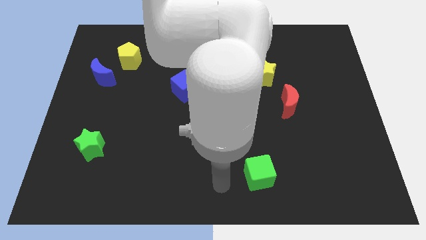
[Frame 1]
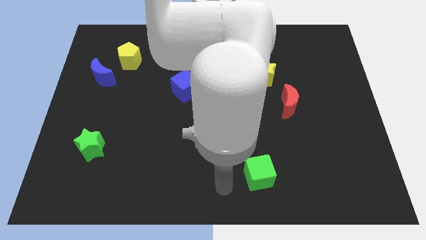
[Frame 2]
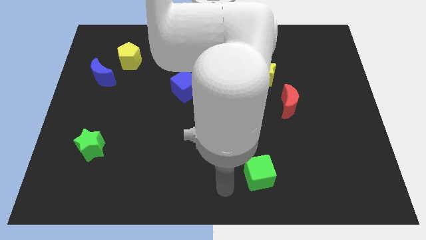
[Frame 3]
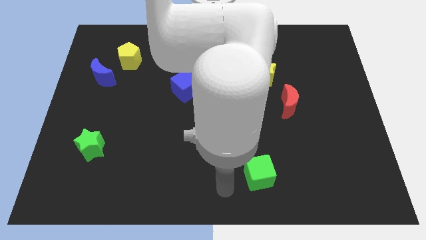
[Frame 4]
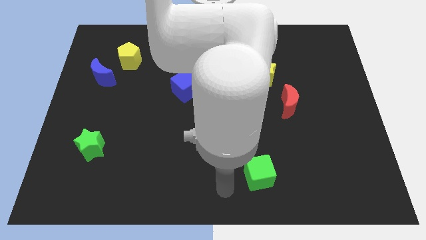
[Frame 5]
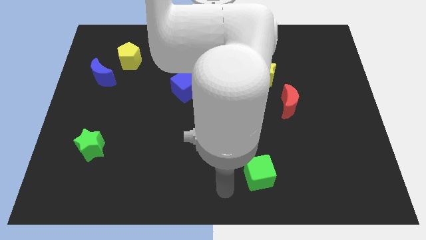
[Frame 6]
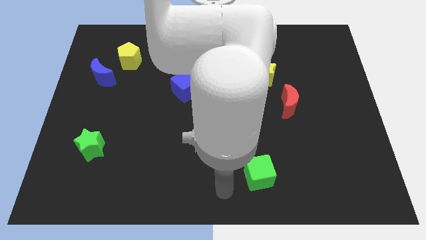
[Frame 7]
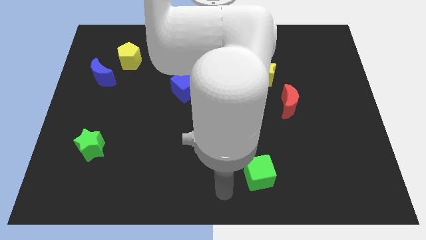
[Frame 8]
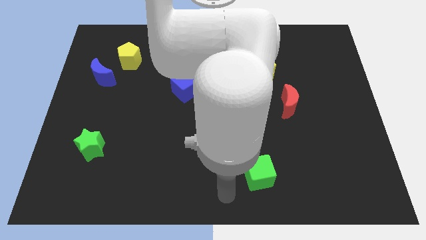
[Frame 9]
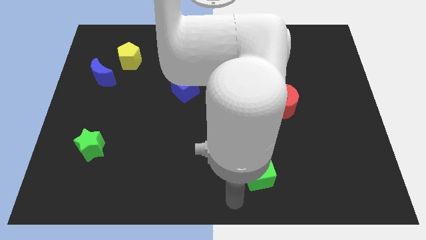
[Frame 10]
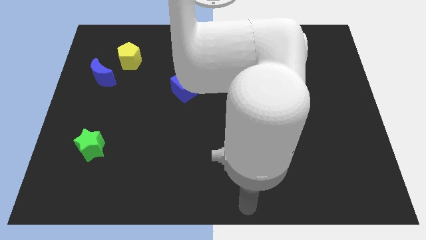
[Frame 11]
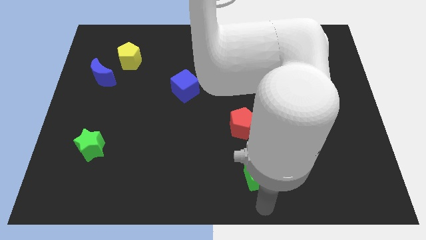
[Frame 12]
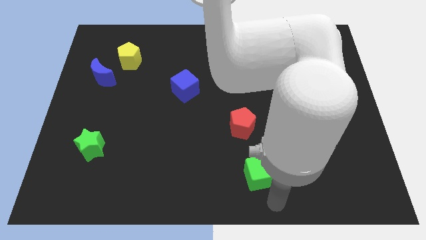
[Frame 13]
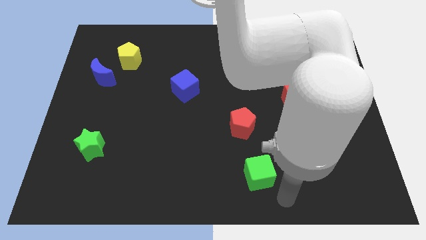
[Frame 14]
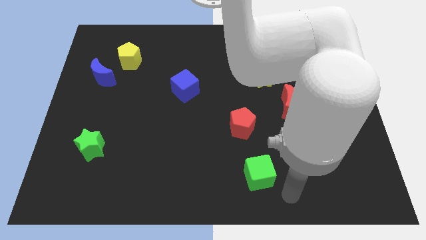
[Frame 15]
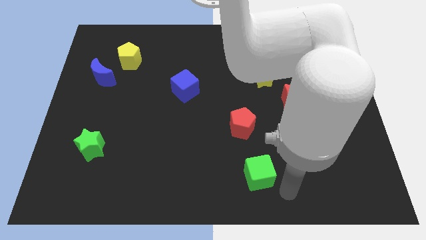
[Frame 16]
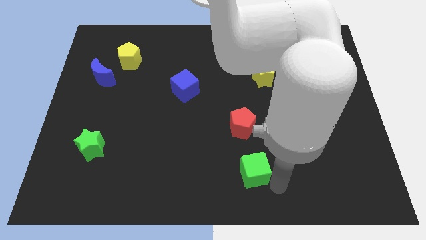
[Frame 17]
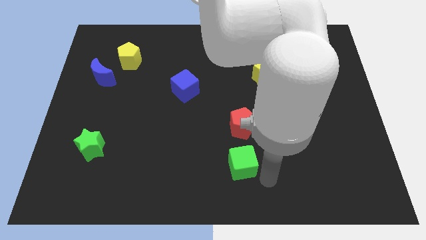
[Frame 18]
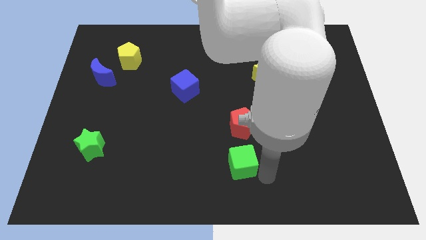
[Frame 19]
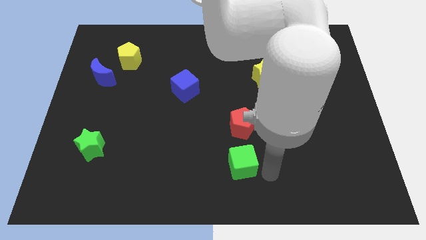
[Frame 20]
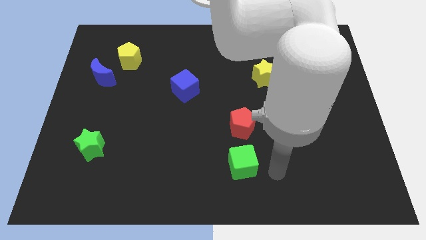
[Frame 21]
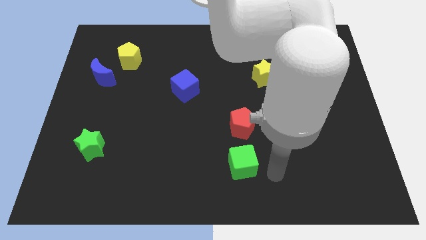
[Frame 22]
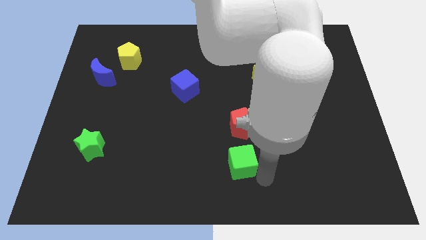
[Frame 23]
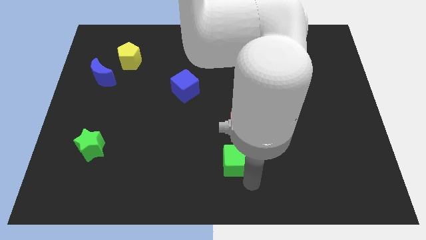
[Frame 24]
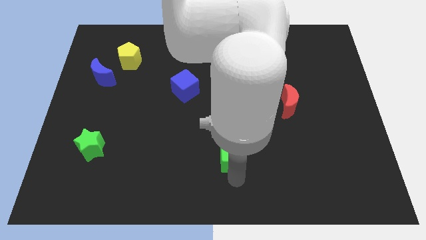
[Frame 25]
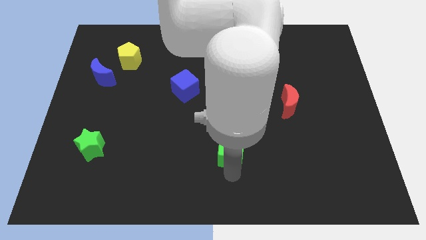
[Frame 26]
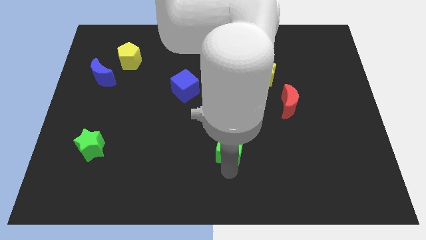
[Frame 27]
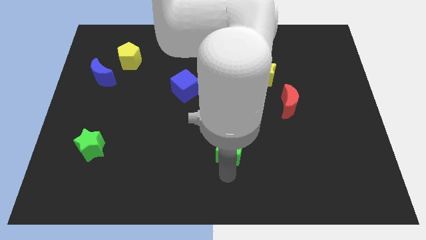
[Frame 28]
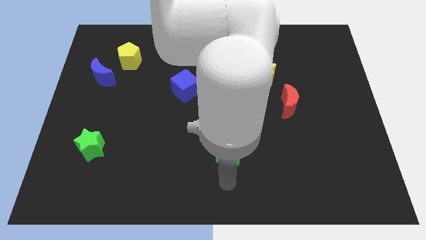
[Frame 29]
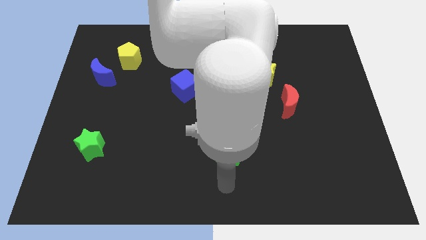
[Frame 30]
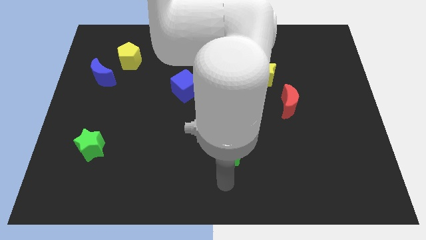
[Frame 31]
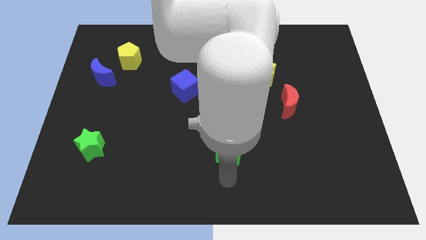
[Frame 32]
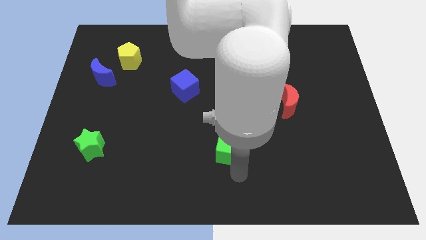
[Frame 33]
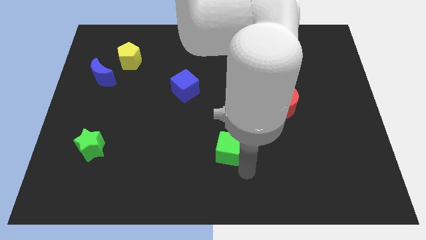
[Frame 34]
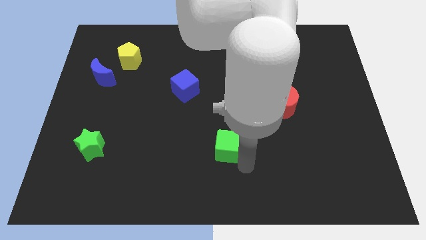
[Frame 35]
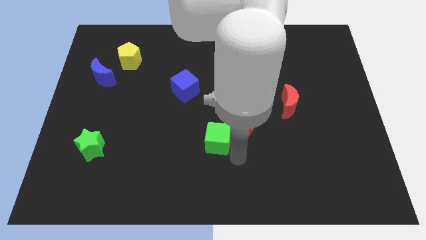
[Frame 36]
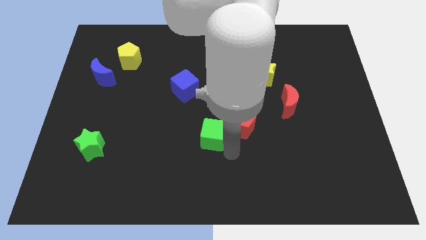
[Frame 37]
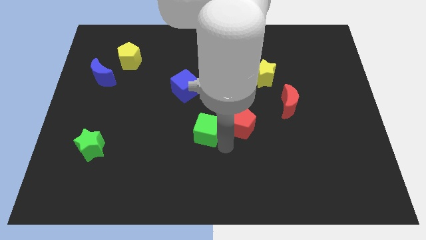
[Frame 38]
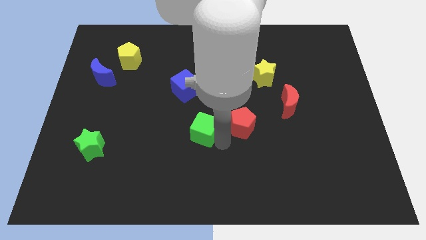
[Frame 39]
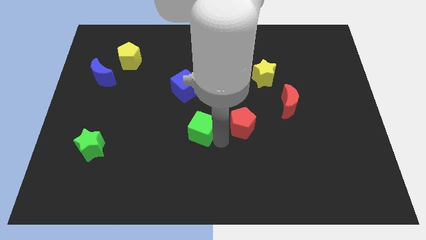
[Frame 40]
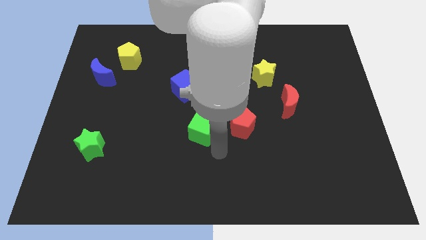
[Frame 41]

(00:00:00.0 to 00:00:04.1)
push the green cube up towards the center

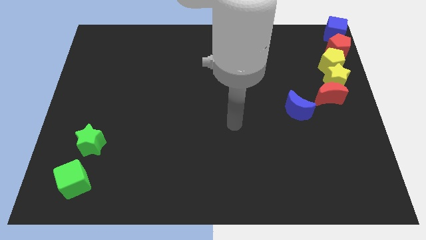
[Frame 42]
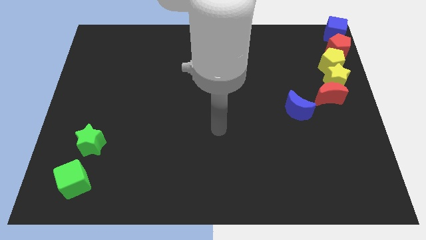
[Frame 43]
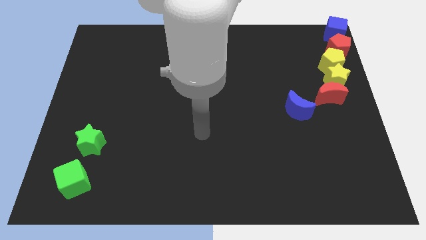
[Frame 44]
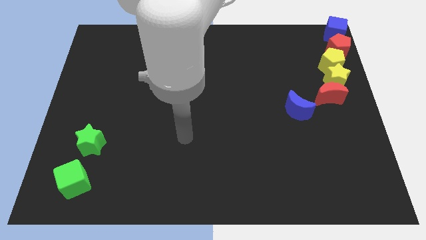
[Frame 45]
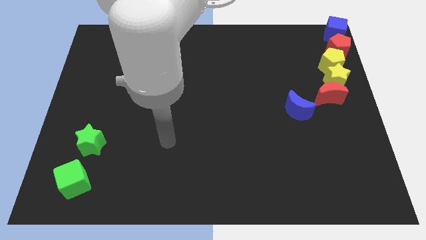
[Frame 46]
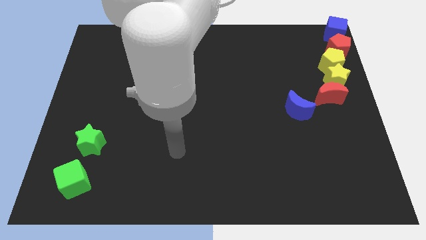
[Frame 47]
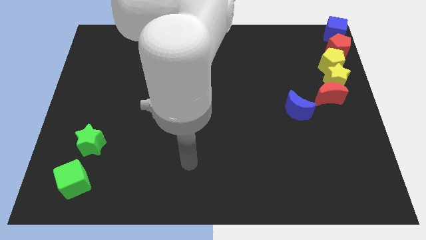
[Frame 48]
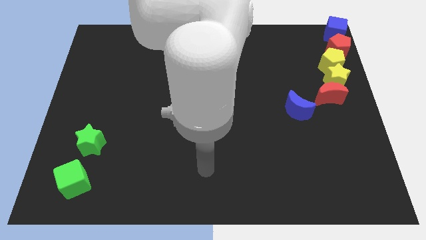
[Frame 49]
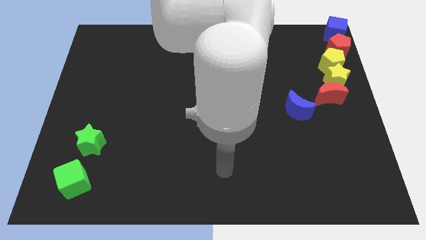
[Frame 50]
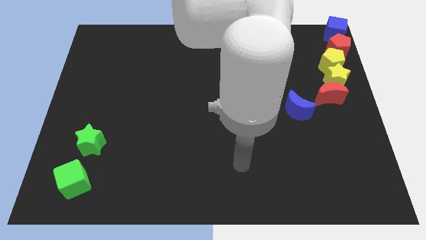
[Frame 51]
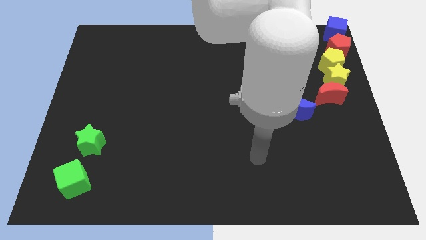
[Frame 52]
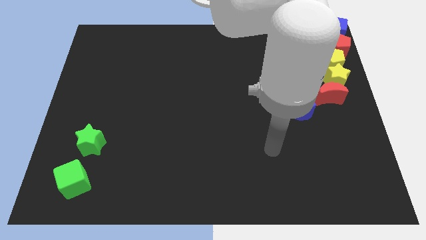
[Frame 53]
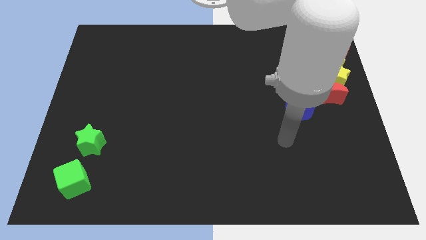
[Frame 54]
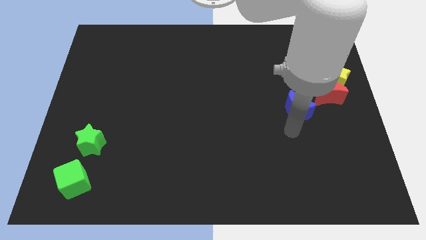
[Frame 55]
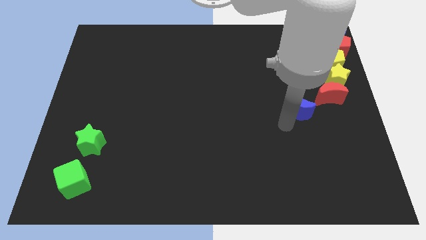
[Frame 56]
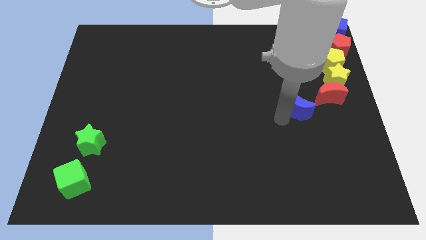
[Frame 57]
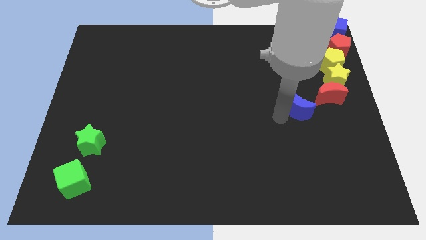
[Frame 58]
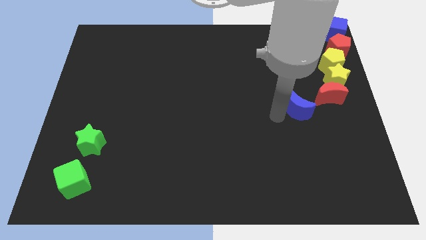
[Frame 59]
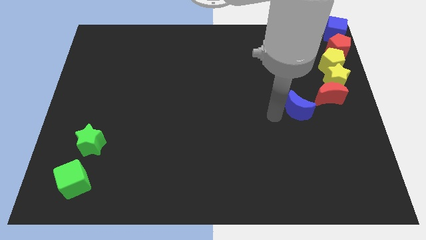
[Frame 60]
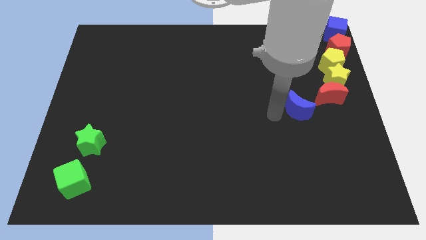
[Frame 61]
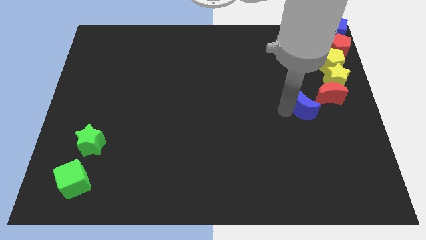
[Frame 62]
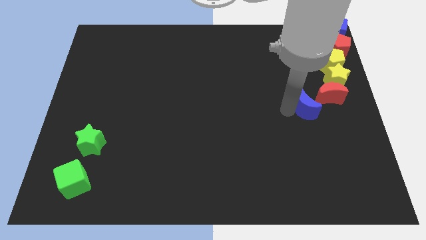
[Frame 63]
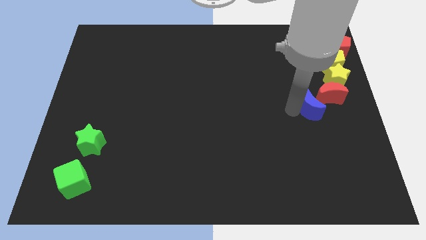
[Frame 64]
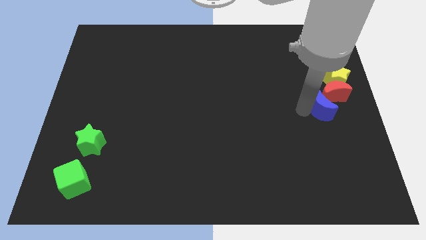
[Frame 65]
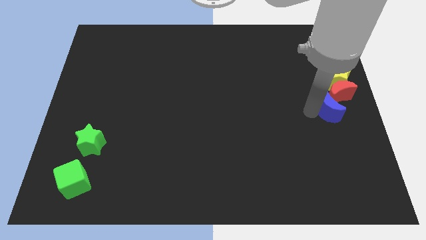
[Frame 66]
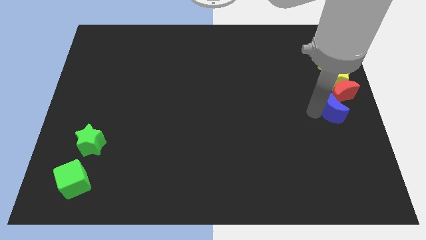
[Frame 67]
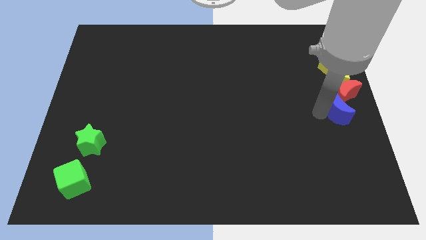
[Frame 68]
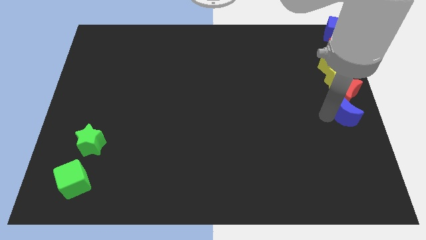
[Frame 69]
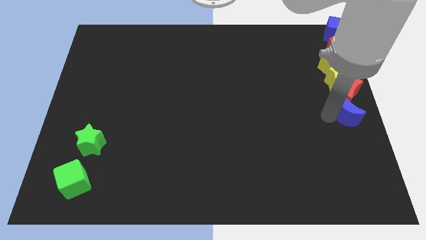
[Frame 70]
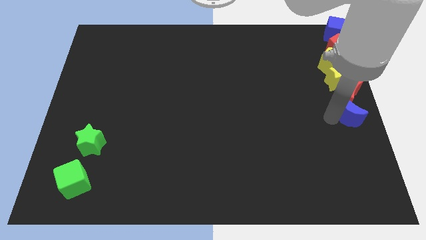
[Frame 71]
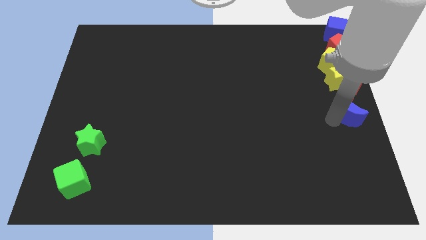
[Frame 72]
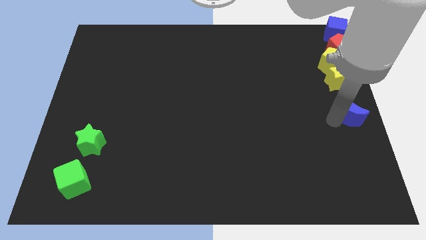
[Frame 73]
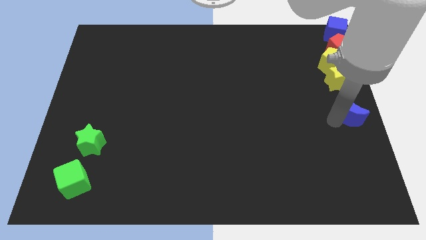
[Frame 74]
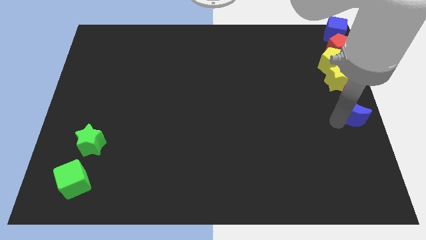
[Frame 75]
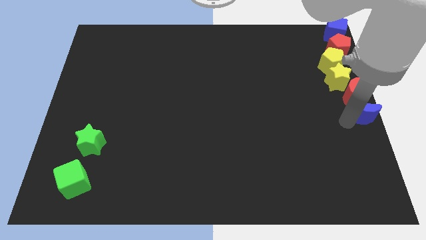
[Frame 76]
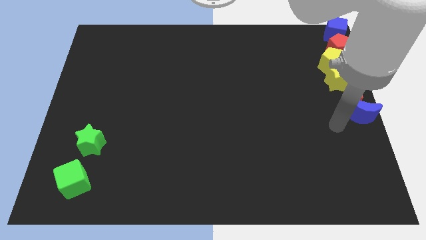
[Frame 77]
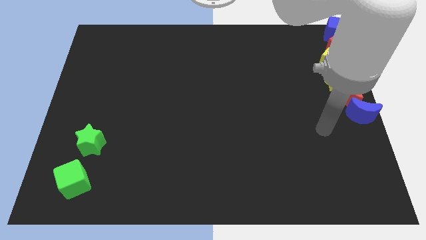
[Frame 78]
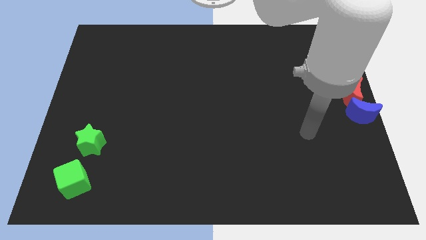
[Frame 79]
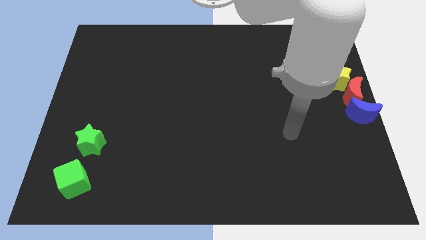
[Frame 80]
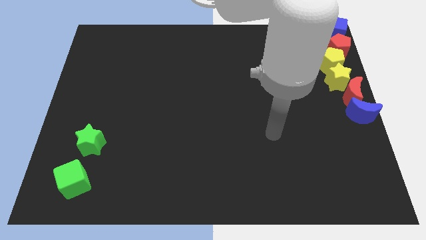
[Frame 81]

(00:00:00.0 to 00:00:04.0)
push the red and blue crescent towards the center right side of the board

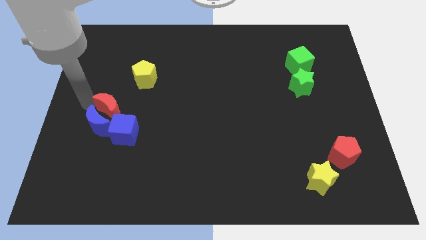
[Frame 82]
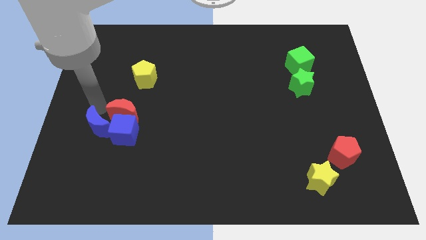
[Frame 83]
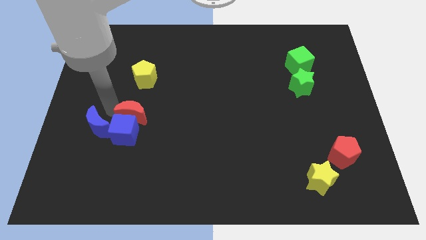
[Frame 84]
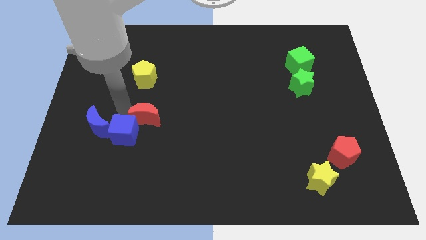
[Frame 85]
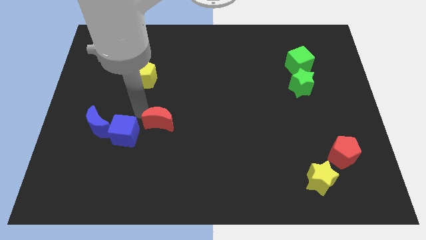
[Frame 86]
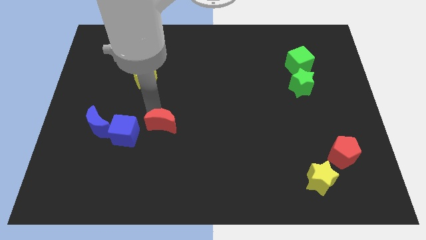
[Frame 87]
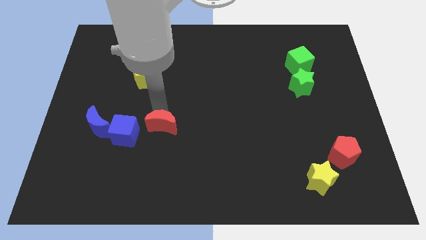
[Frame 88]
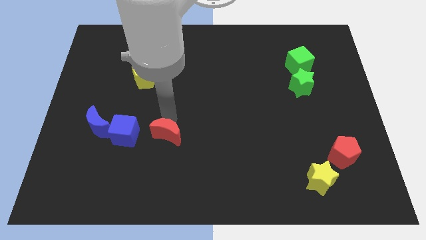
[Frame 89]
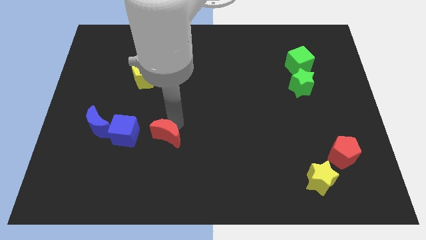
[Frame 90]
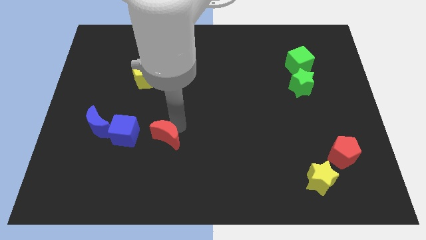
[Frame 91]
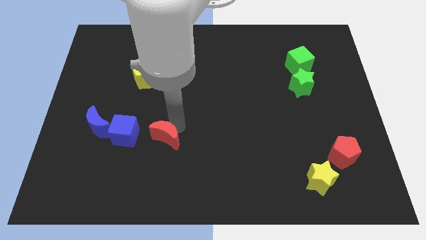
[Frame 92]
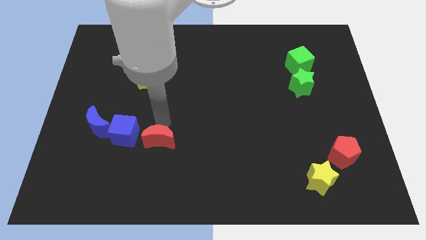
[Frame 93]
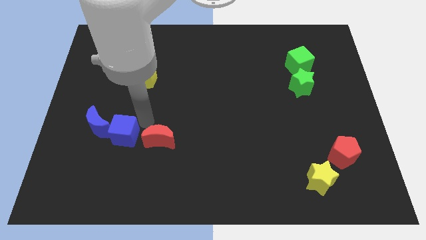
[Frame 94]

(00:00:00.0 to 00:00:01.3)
move the red crescent right to the blue cube
